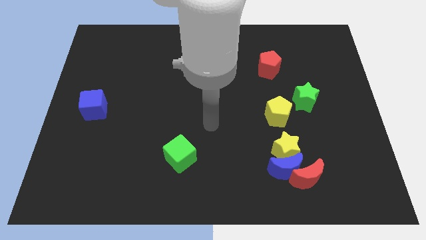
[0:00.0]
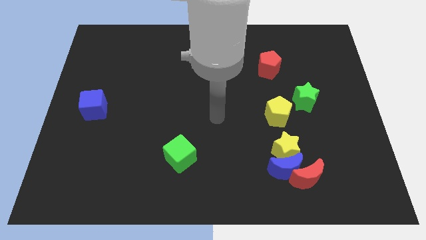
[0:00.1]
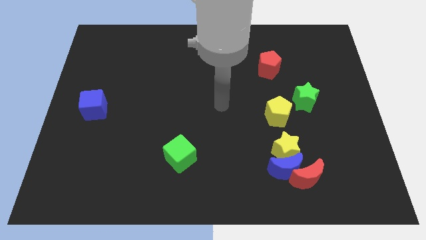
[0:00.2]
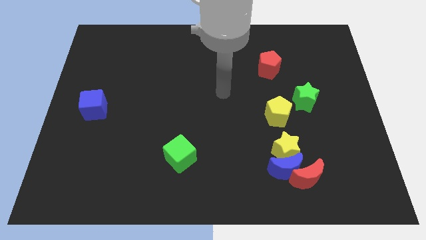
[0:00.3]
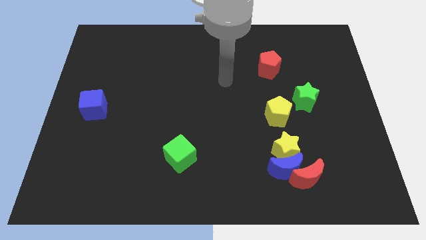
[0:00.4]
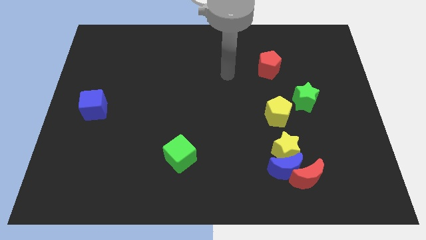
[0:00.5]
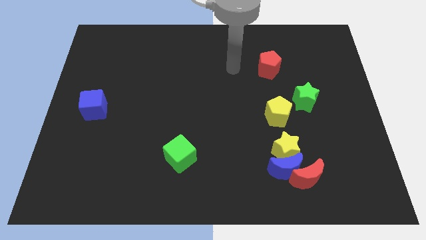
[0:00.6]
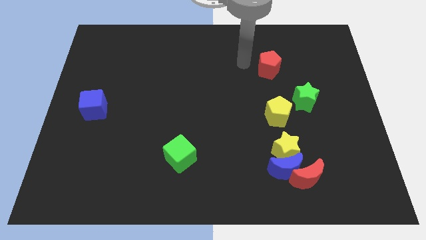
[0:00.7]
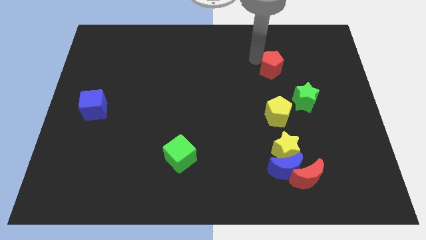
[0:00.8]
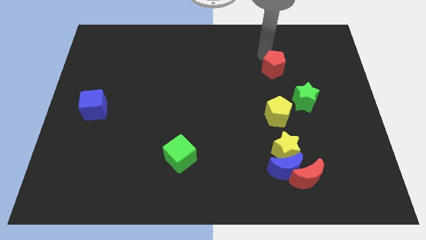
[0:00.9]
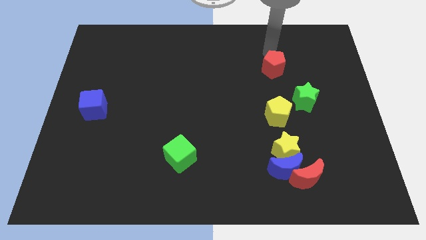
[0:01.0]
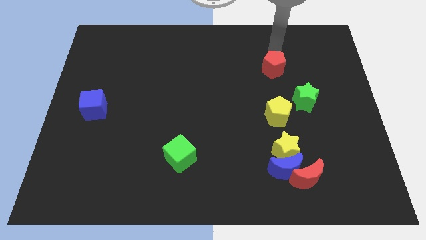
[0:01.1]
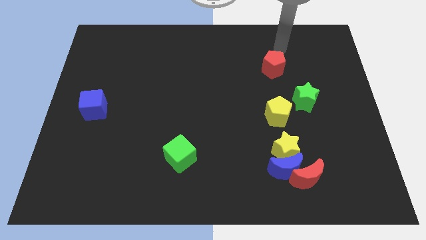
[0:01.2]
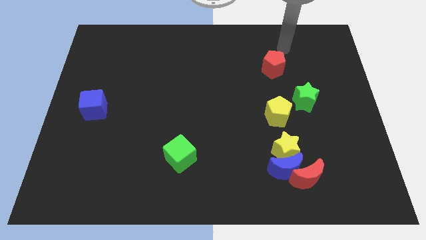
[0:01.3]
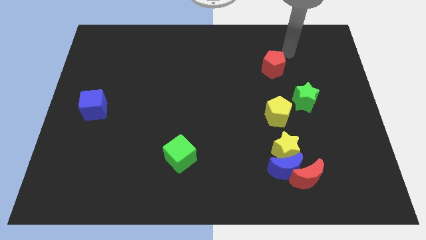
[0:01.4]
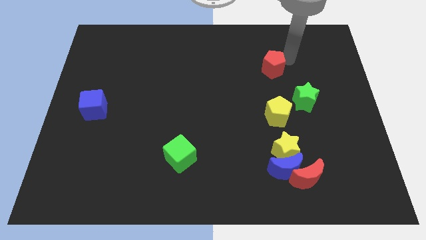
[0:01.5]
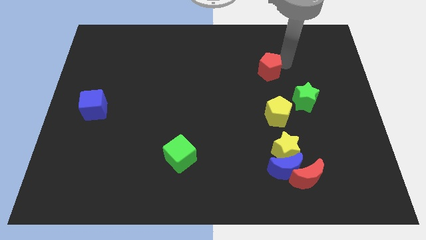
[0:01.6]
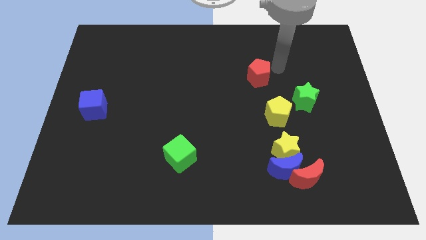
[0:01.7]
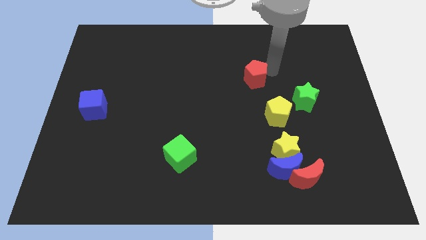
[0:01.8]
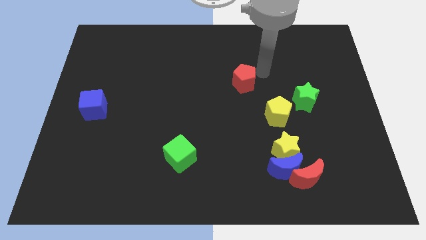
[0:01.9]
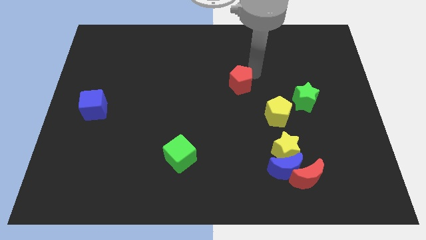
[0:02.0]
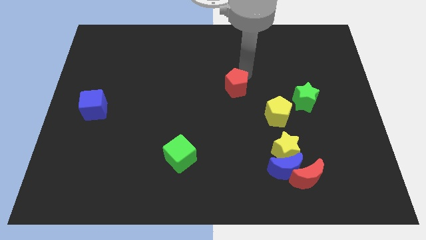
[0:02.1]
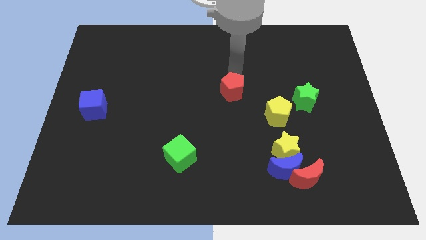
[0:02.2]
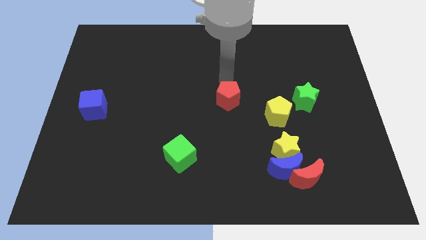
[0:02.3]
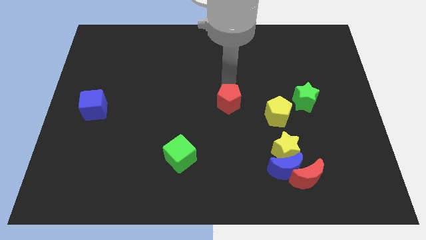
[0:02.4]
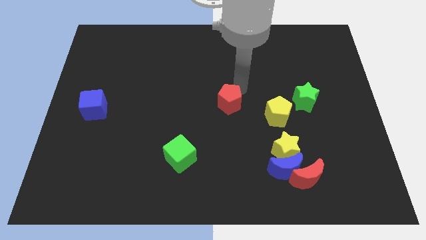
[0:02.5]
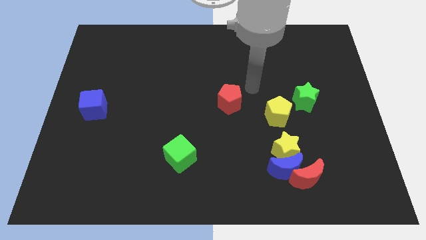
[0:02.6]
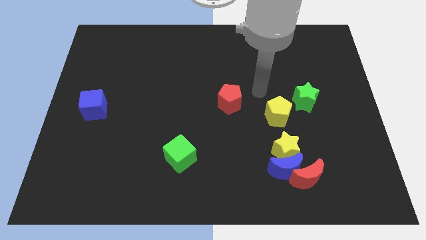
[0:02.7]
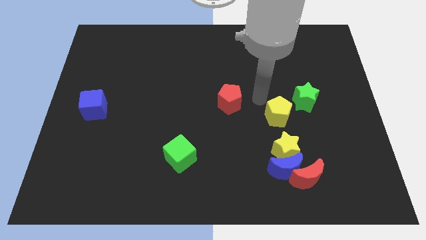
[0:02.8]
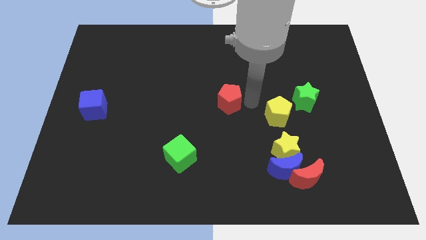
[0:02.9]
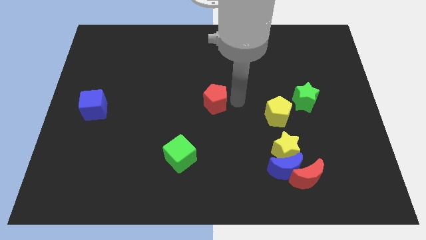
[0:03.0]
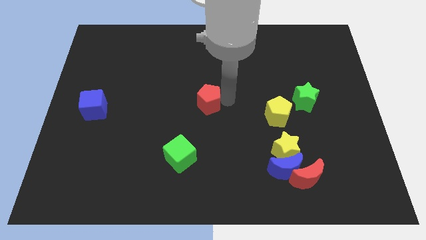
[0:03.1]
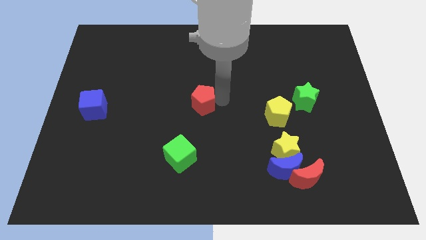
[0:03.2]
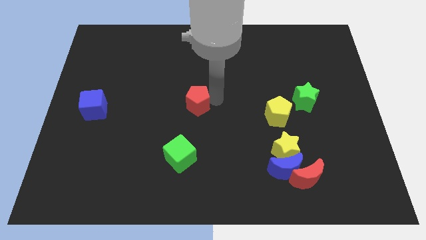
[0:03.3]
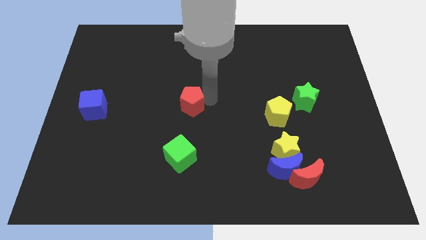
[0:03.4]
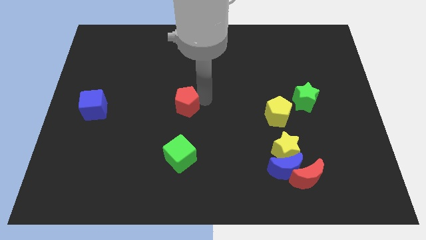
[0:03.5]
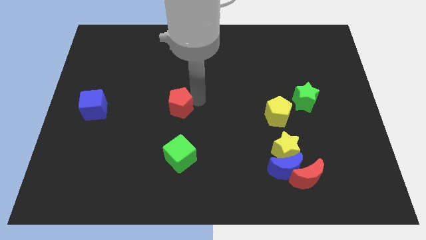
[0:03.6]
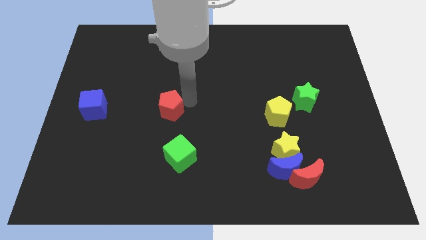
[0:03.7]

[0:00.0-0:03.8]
move the red pentagon parallel to the top of the green cube

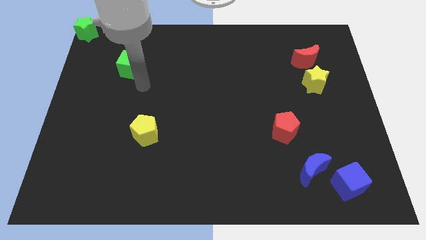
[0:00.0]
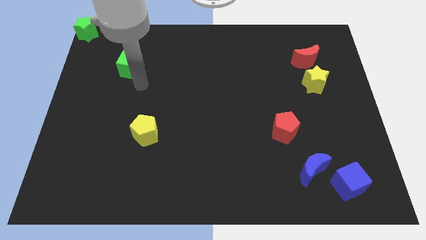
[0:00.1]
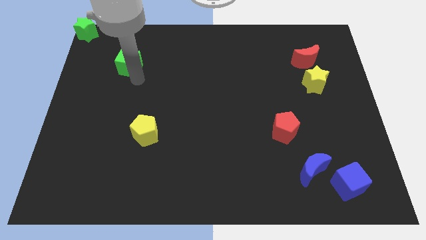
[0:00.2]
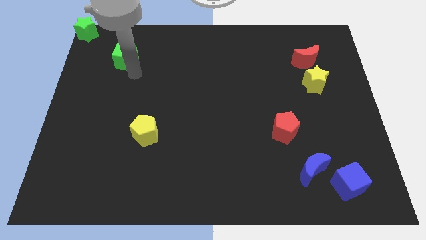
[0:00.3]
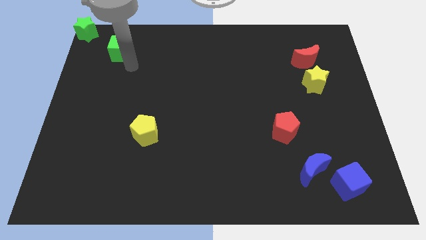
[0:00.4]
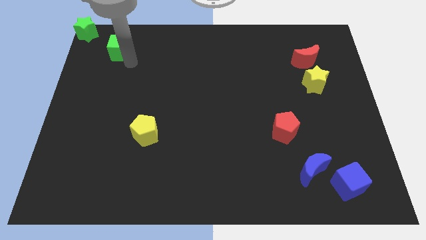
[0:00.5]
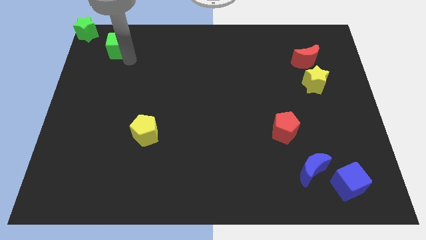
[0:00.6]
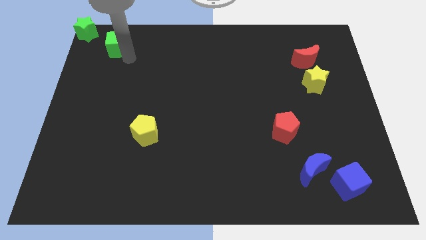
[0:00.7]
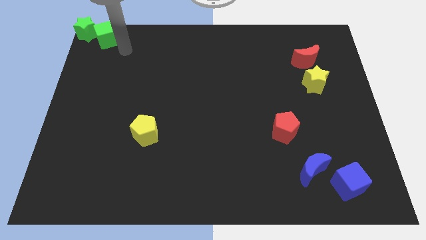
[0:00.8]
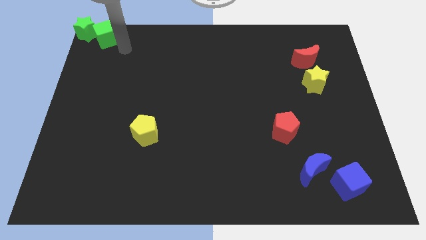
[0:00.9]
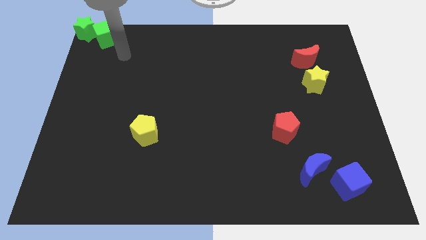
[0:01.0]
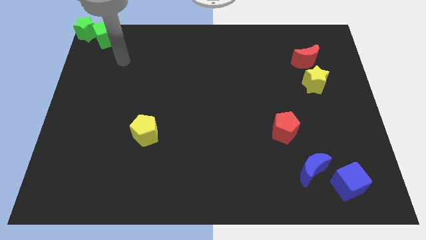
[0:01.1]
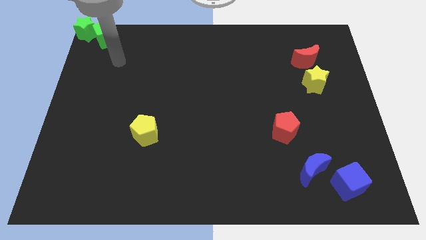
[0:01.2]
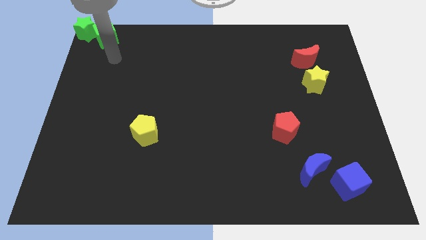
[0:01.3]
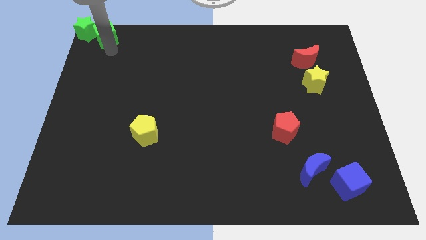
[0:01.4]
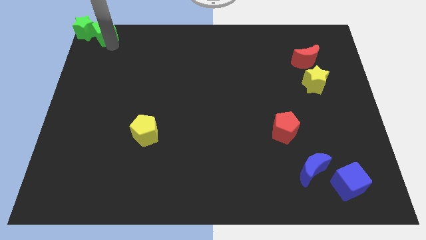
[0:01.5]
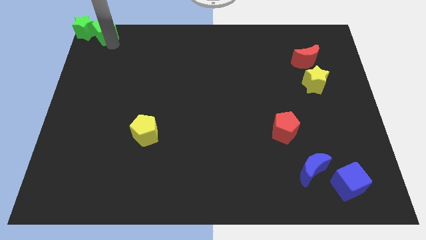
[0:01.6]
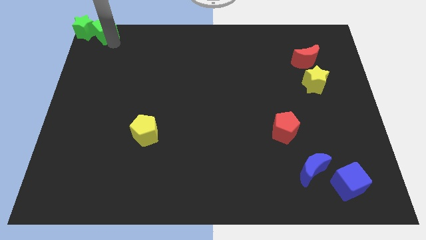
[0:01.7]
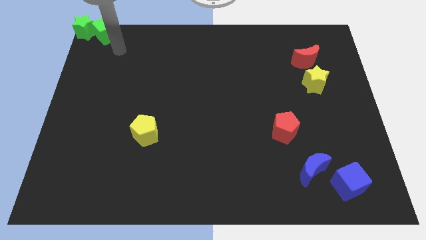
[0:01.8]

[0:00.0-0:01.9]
push the green cube into the green star

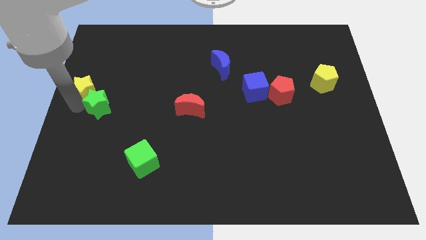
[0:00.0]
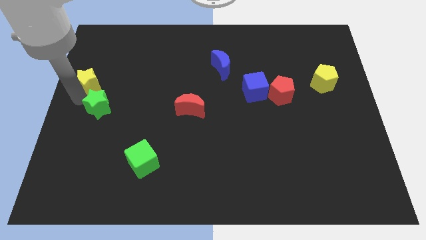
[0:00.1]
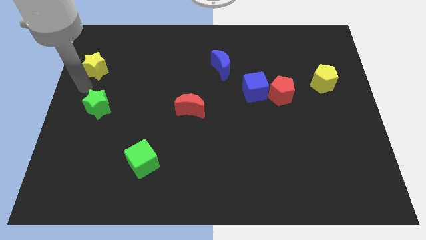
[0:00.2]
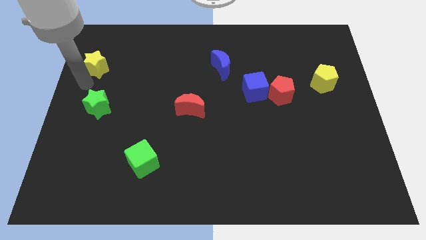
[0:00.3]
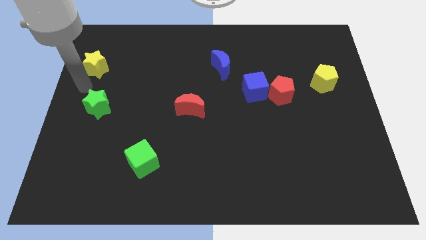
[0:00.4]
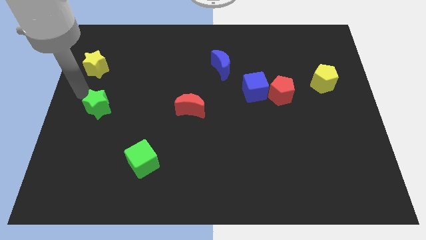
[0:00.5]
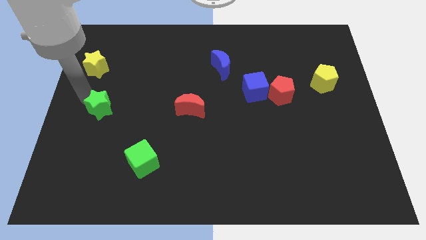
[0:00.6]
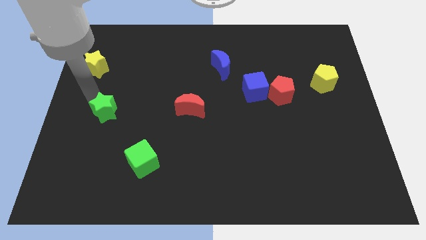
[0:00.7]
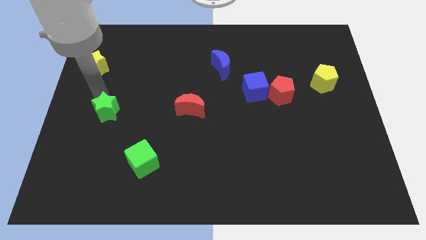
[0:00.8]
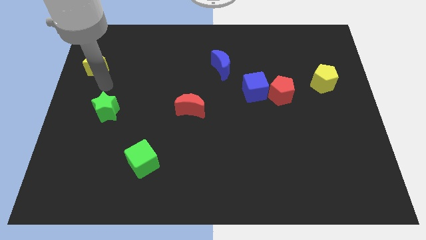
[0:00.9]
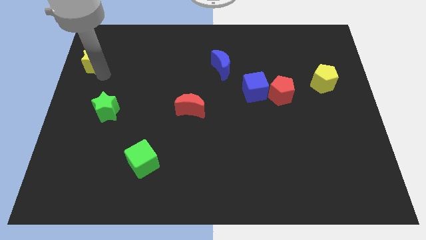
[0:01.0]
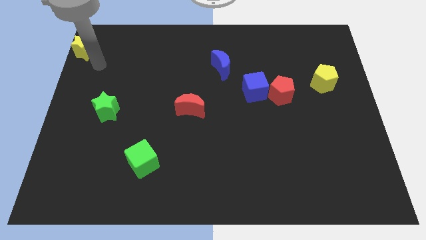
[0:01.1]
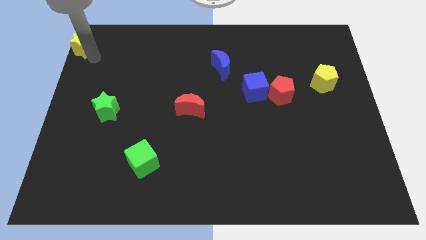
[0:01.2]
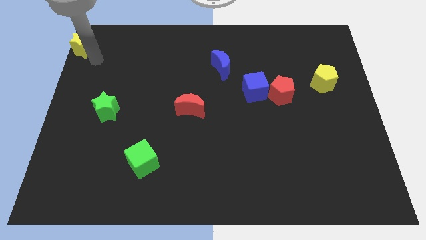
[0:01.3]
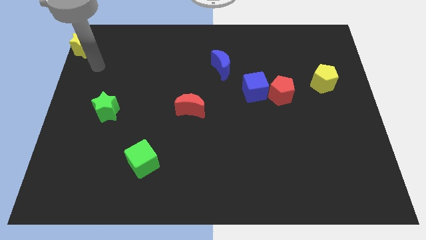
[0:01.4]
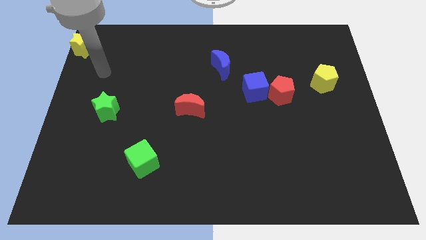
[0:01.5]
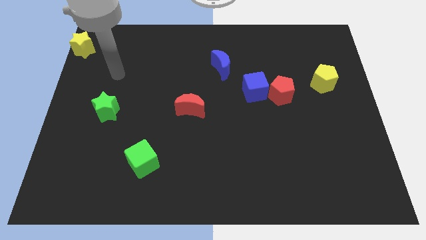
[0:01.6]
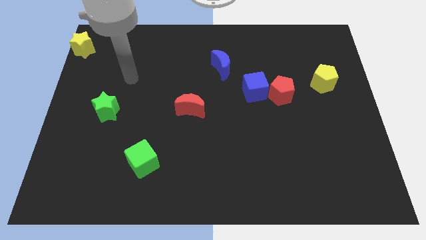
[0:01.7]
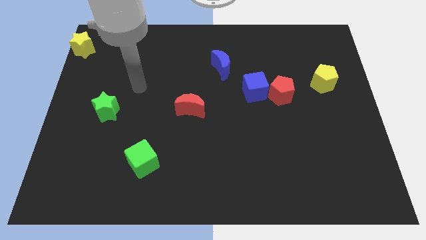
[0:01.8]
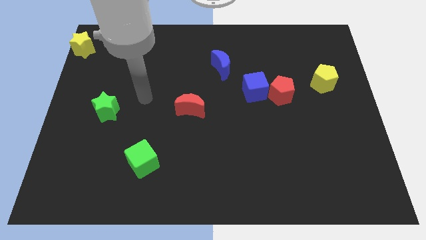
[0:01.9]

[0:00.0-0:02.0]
separate green star and yellow star

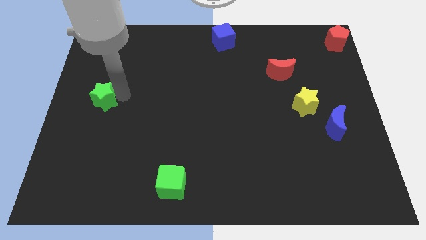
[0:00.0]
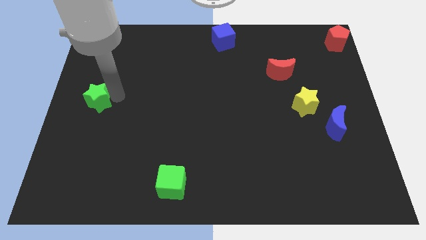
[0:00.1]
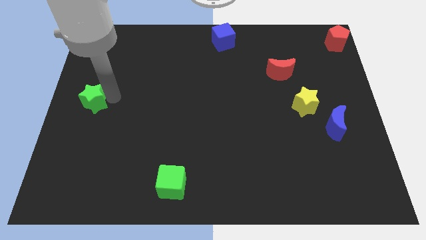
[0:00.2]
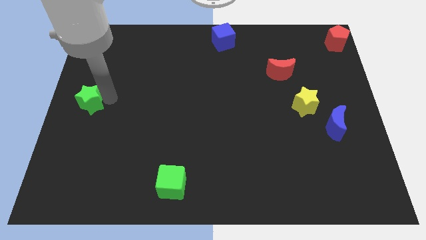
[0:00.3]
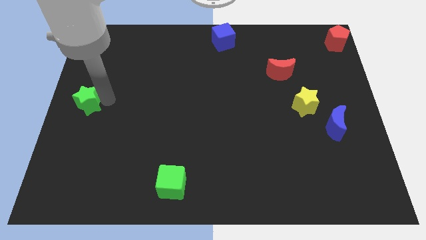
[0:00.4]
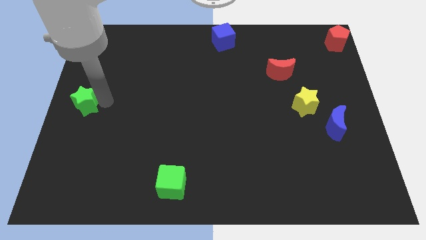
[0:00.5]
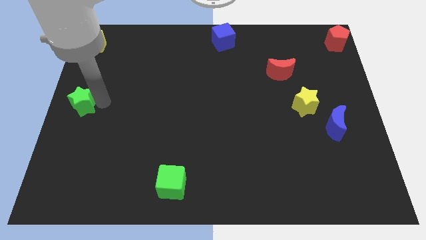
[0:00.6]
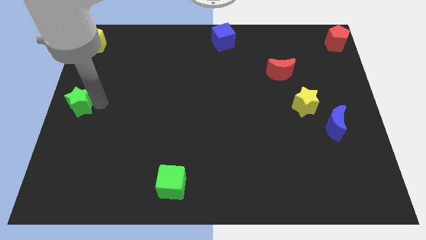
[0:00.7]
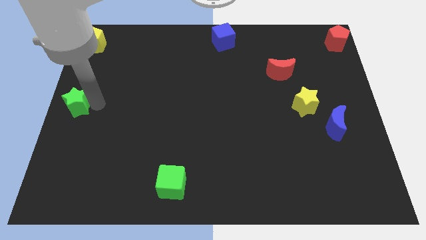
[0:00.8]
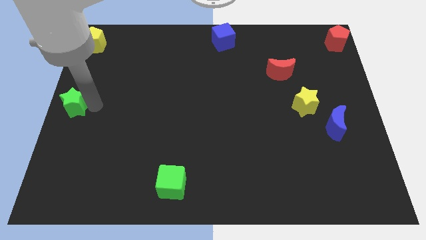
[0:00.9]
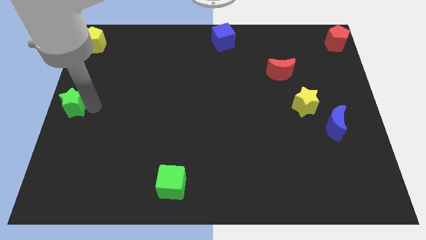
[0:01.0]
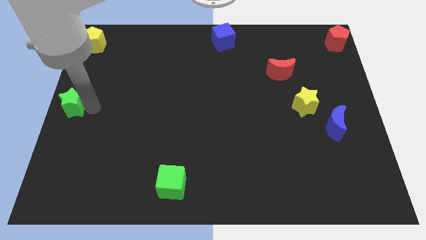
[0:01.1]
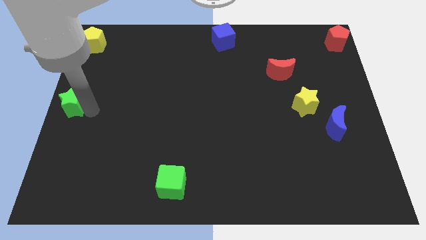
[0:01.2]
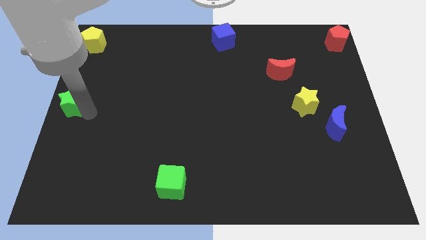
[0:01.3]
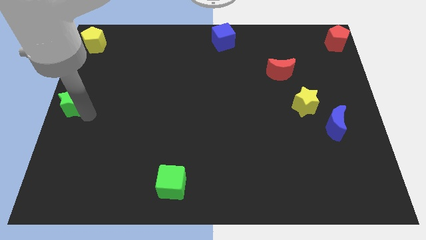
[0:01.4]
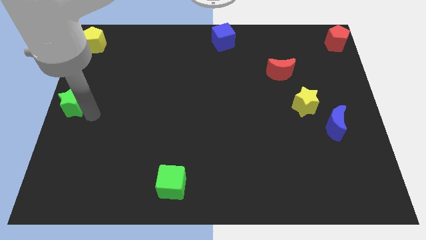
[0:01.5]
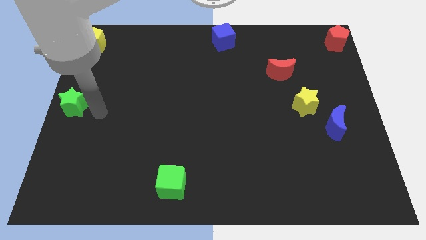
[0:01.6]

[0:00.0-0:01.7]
move the green star to the left center side of board
